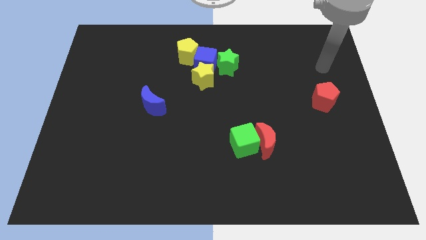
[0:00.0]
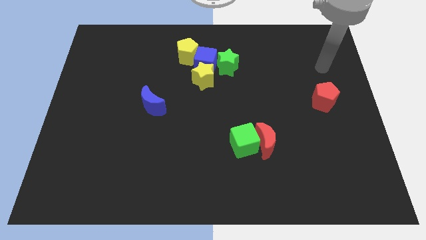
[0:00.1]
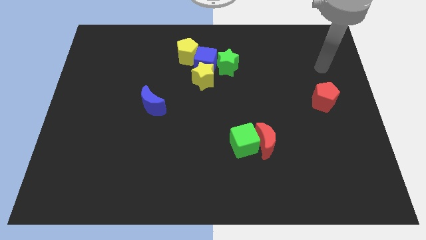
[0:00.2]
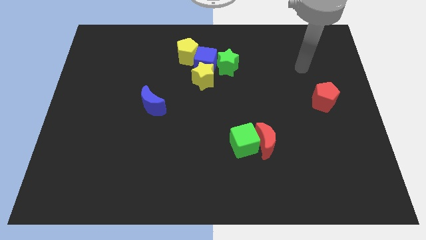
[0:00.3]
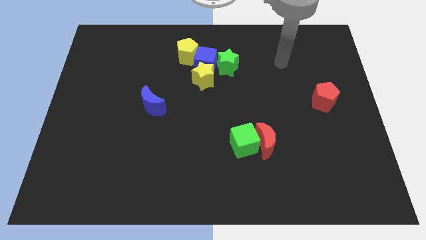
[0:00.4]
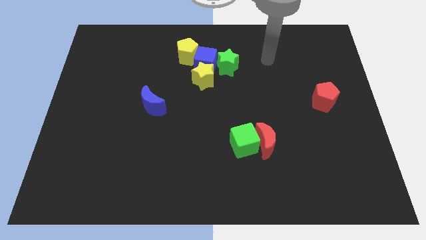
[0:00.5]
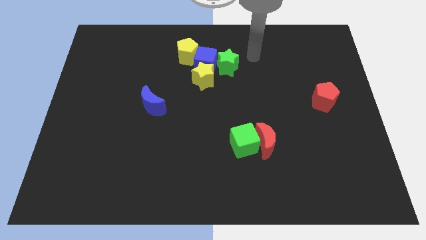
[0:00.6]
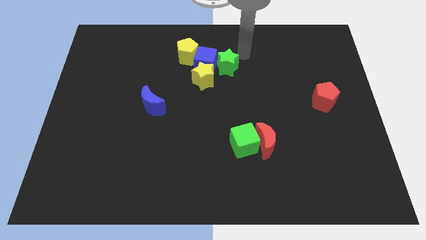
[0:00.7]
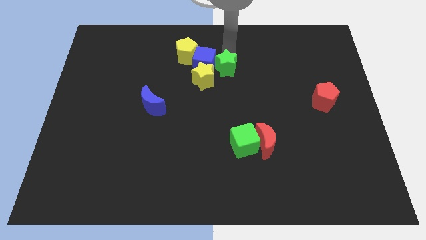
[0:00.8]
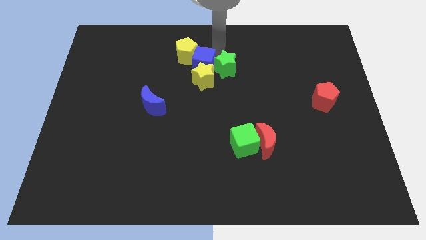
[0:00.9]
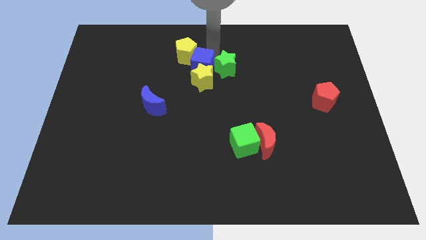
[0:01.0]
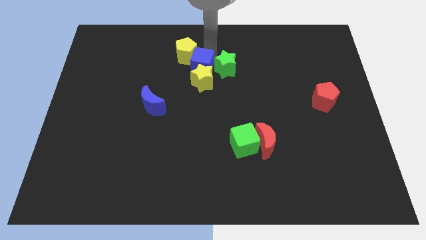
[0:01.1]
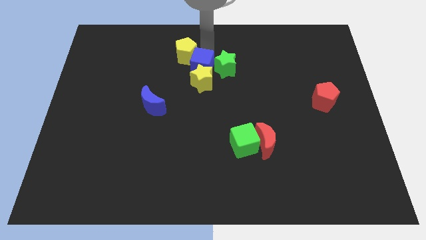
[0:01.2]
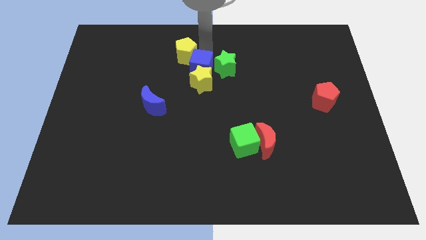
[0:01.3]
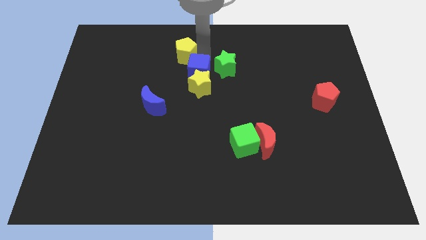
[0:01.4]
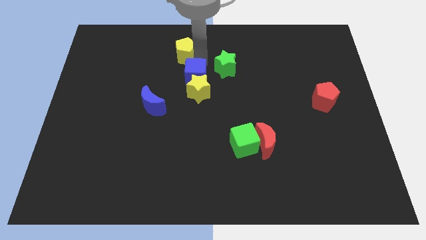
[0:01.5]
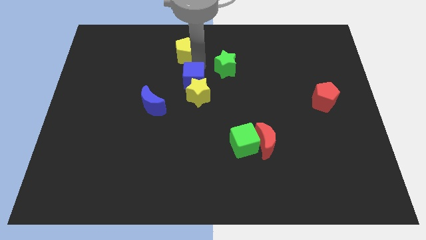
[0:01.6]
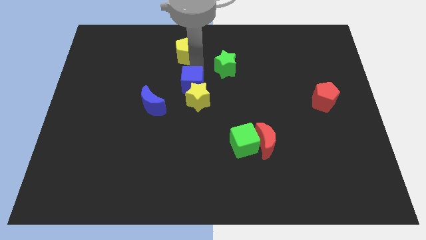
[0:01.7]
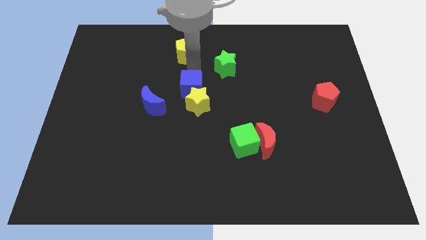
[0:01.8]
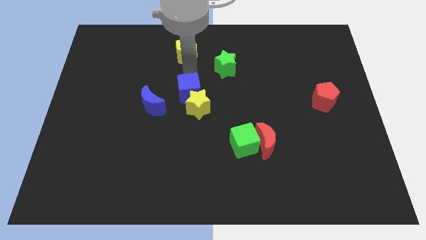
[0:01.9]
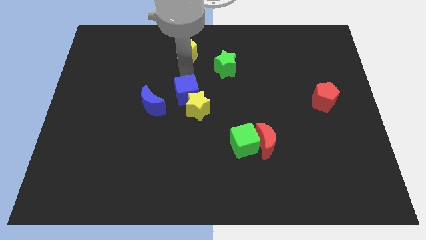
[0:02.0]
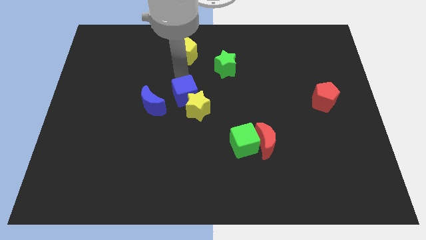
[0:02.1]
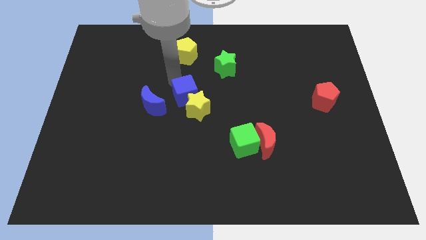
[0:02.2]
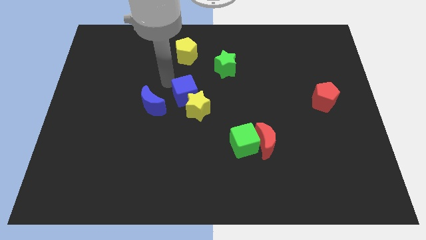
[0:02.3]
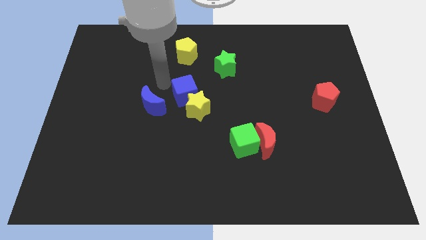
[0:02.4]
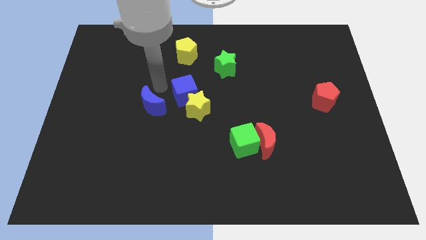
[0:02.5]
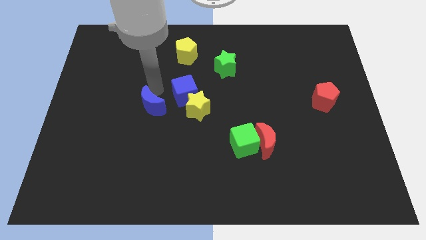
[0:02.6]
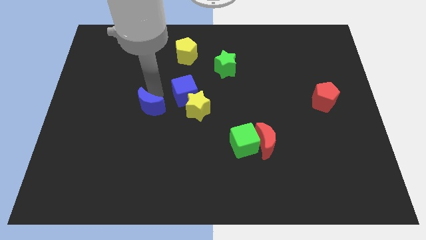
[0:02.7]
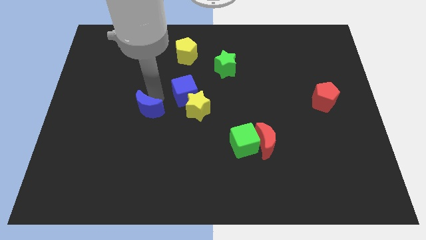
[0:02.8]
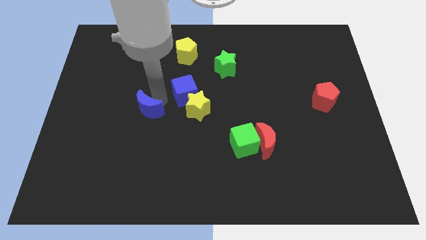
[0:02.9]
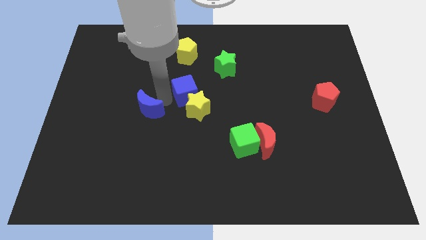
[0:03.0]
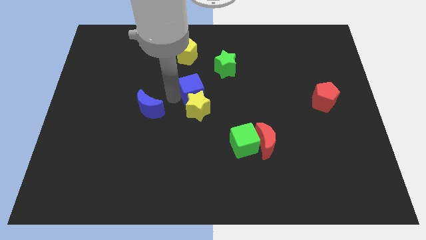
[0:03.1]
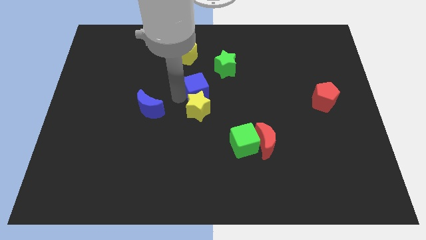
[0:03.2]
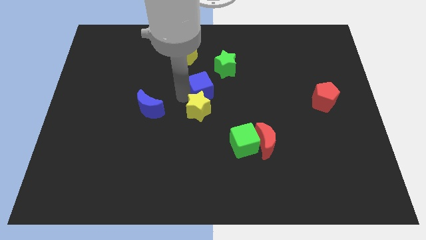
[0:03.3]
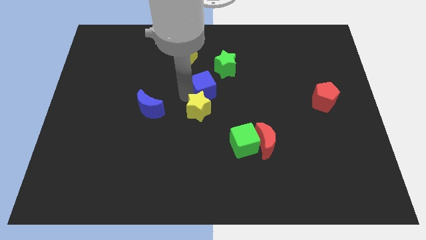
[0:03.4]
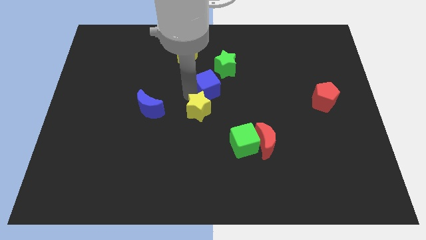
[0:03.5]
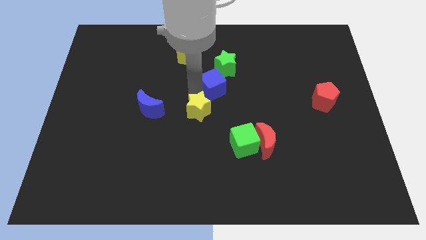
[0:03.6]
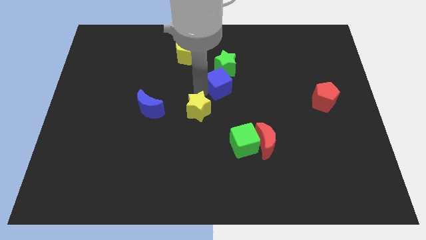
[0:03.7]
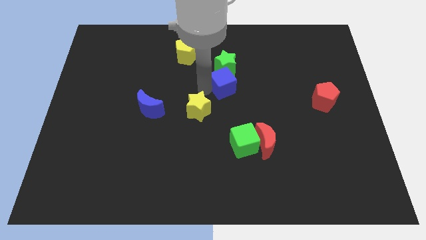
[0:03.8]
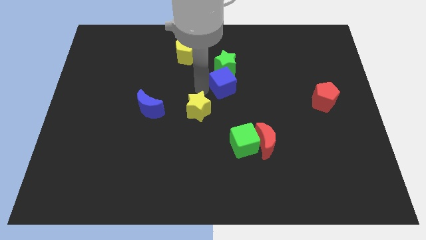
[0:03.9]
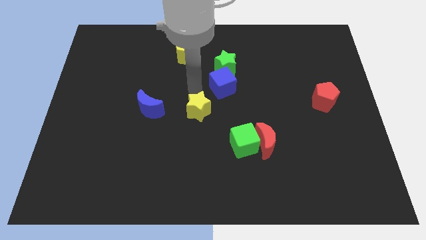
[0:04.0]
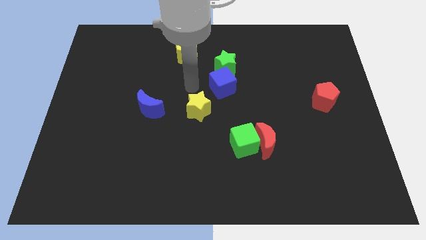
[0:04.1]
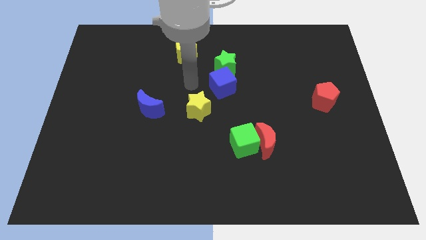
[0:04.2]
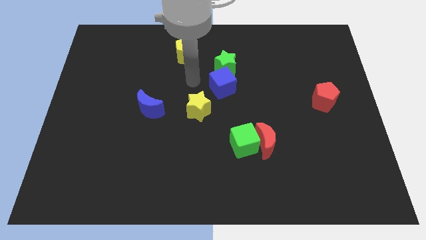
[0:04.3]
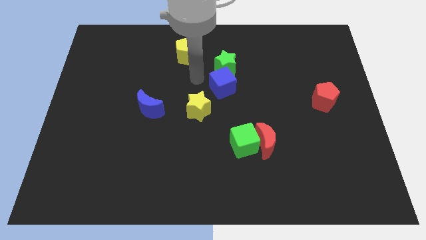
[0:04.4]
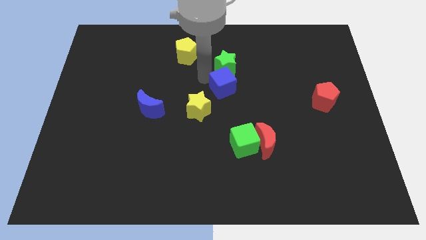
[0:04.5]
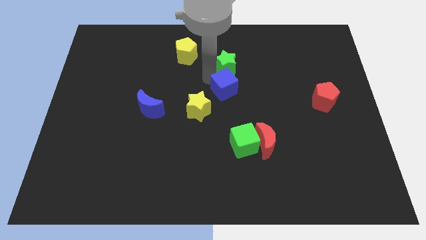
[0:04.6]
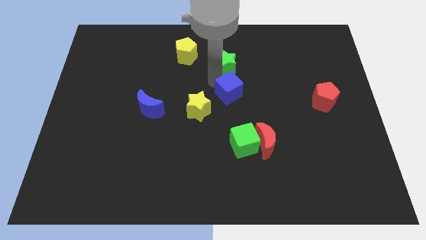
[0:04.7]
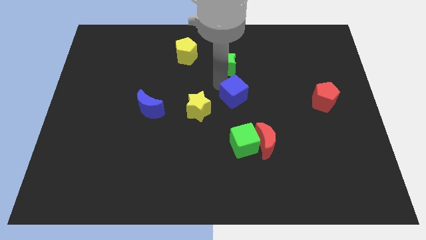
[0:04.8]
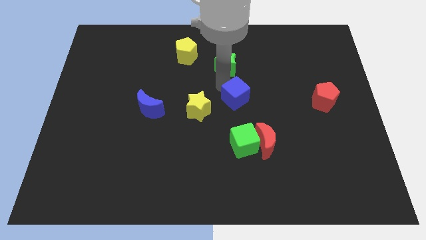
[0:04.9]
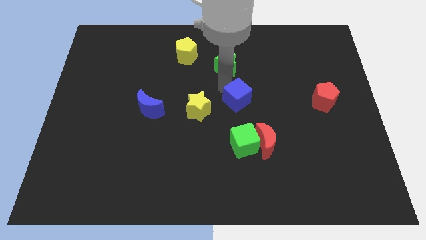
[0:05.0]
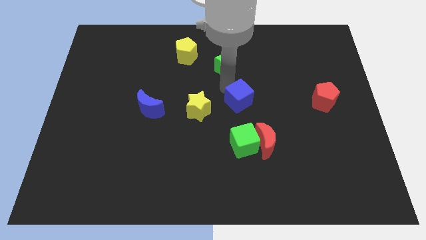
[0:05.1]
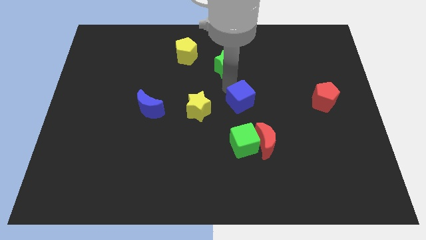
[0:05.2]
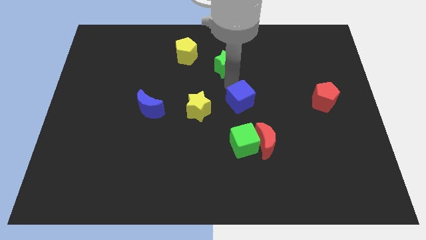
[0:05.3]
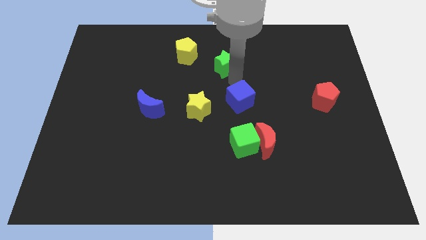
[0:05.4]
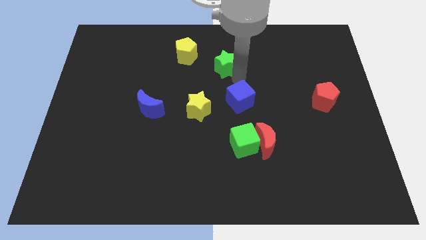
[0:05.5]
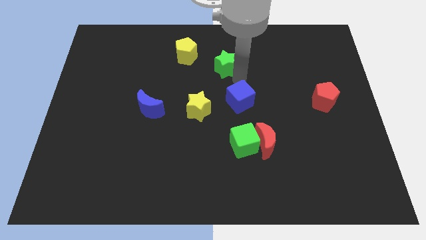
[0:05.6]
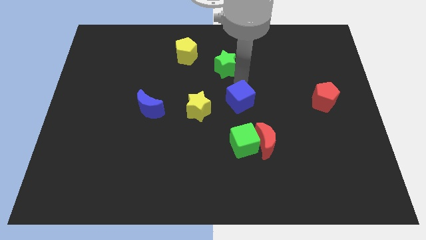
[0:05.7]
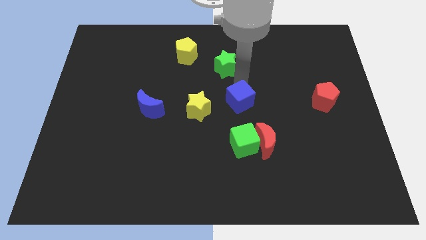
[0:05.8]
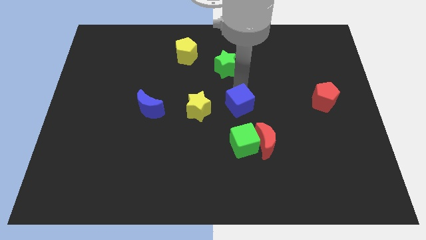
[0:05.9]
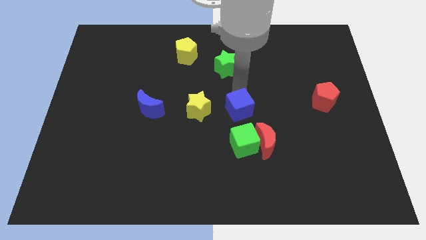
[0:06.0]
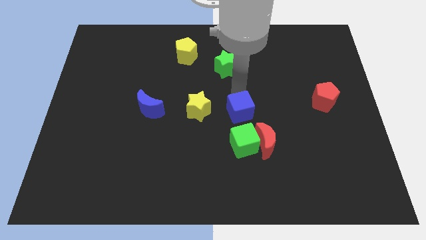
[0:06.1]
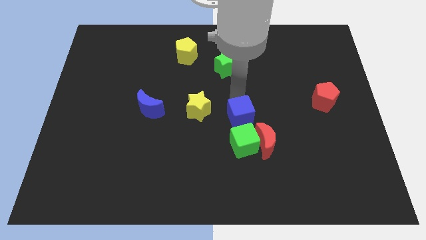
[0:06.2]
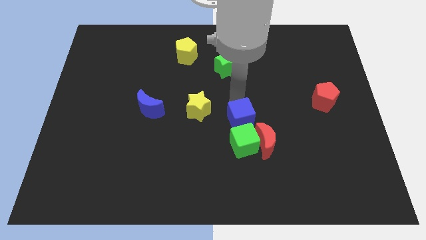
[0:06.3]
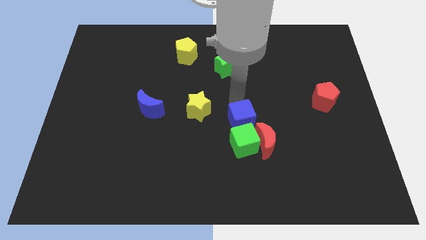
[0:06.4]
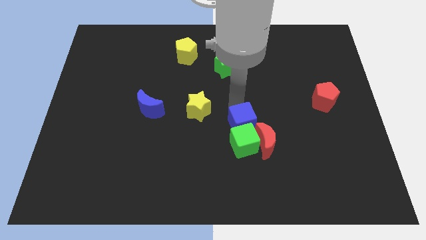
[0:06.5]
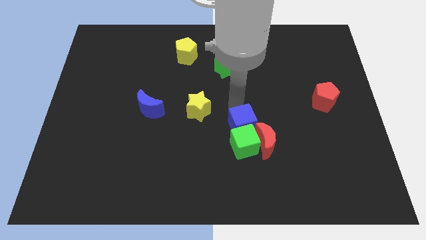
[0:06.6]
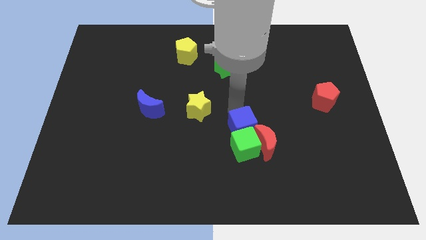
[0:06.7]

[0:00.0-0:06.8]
put the blue cube towards the green cube

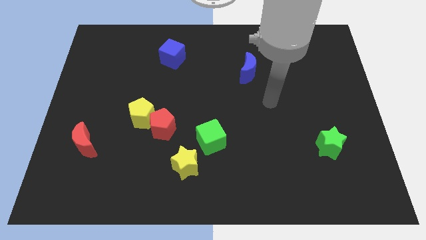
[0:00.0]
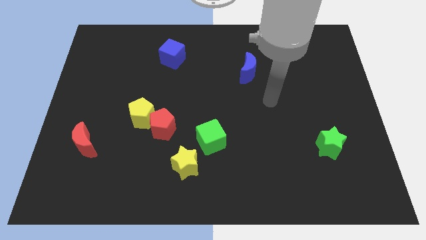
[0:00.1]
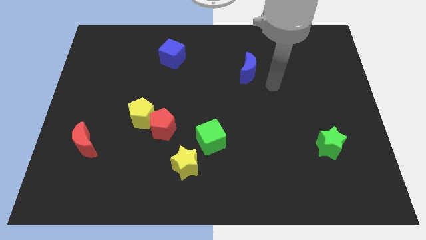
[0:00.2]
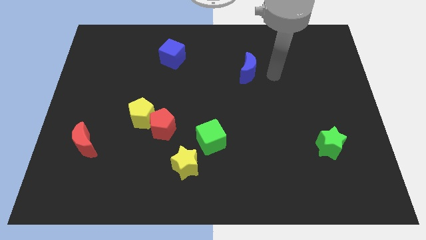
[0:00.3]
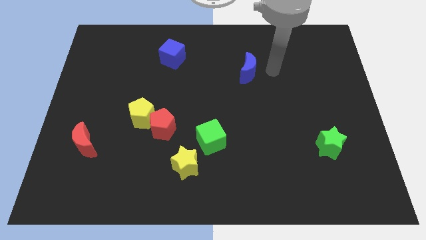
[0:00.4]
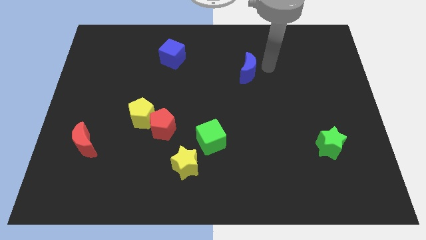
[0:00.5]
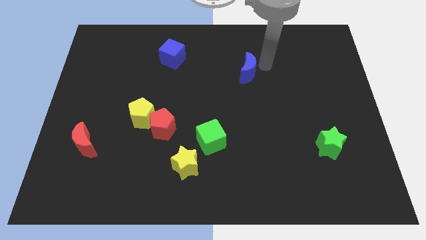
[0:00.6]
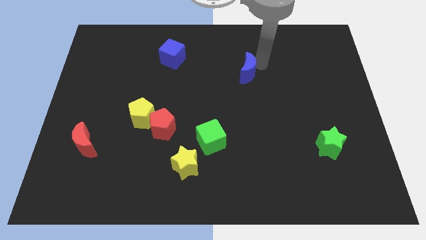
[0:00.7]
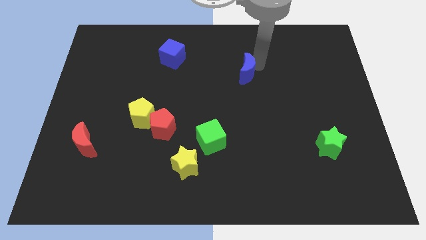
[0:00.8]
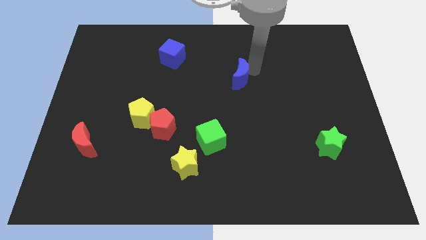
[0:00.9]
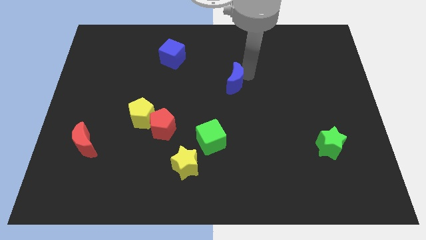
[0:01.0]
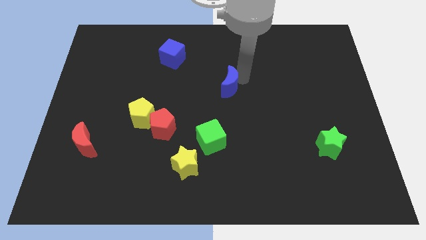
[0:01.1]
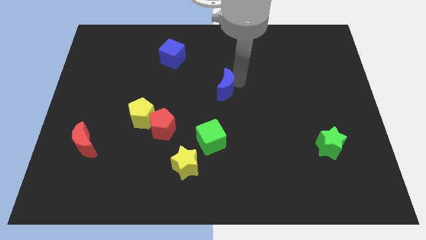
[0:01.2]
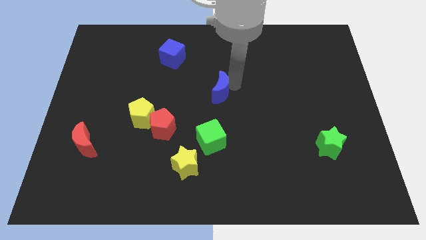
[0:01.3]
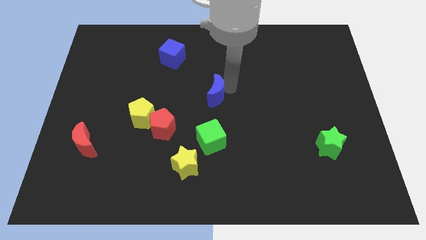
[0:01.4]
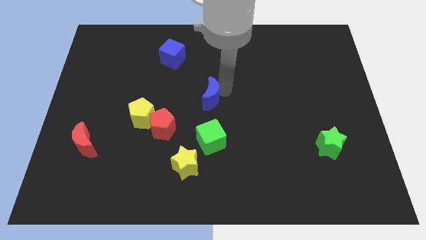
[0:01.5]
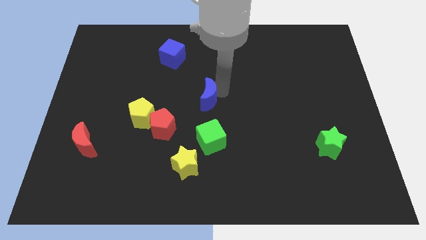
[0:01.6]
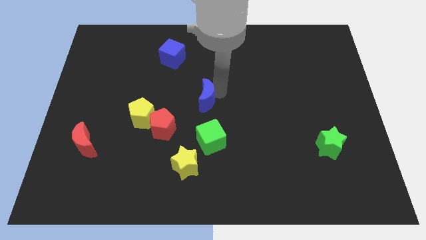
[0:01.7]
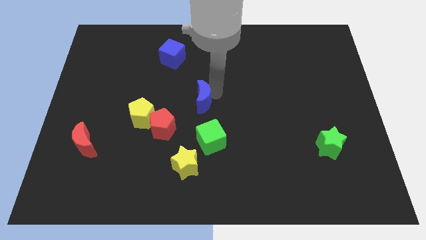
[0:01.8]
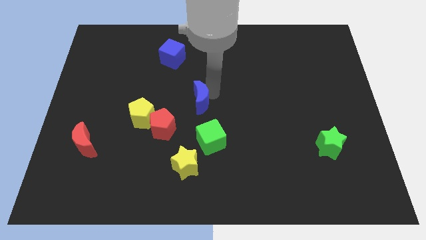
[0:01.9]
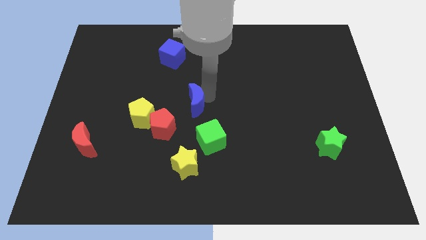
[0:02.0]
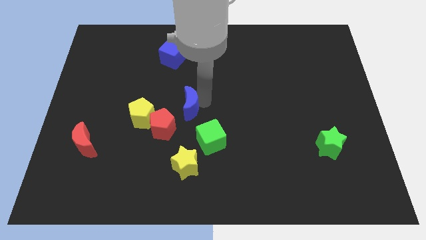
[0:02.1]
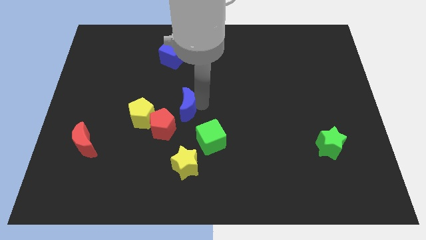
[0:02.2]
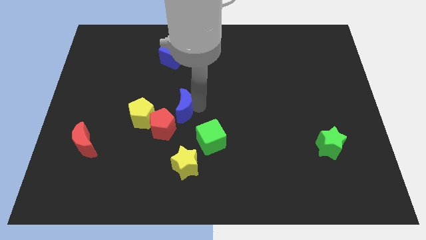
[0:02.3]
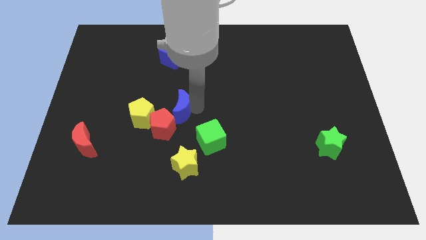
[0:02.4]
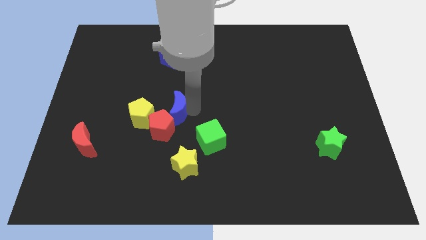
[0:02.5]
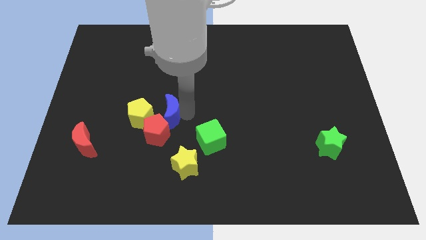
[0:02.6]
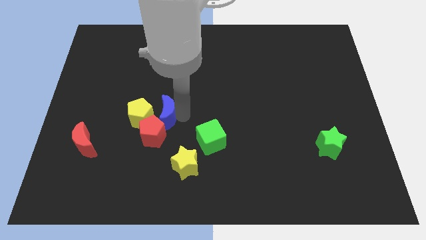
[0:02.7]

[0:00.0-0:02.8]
move the blue moon towards the red pentagon
